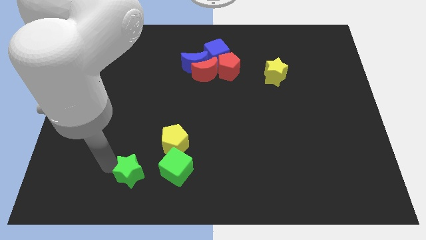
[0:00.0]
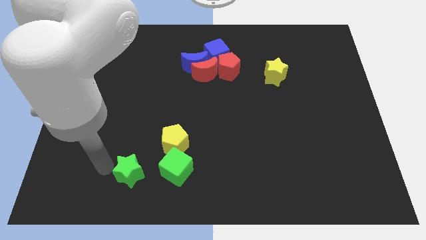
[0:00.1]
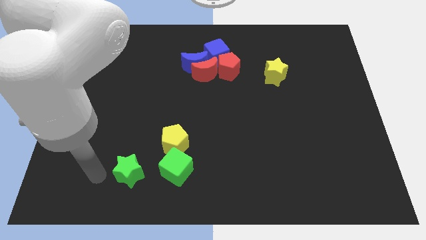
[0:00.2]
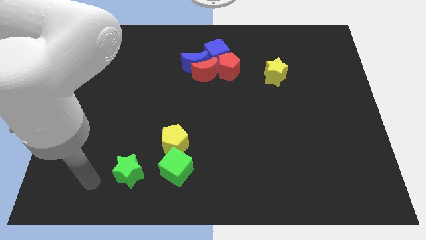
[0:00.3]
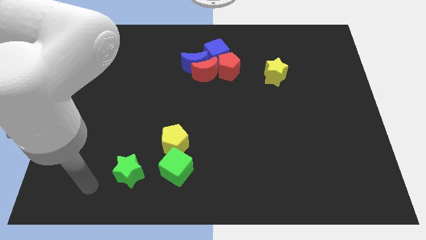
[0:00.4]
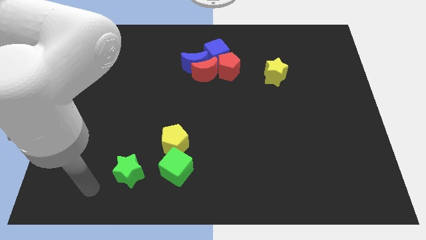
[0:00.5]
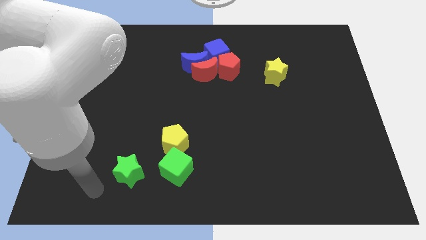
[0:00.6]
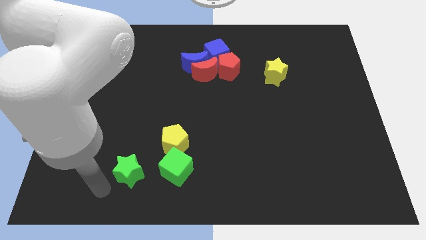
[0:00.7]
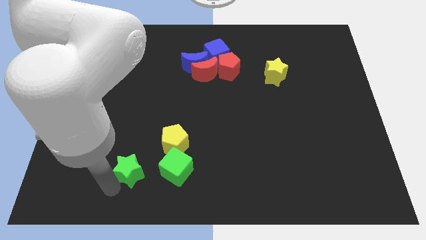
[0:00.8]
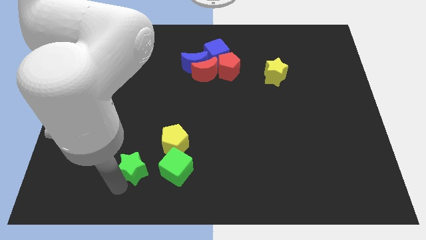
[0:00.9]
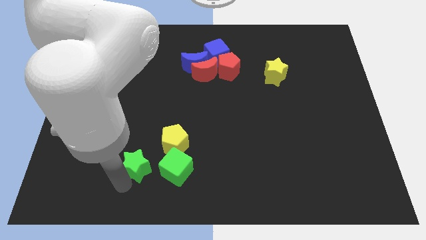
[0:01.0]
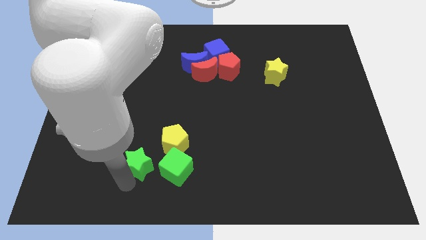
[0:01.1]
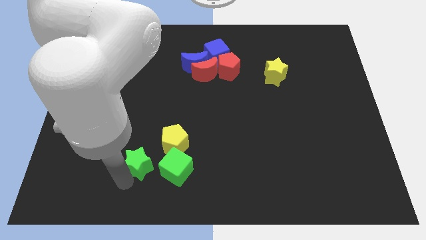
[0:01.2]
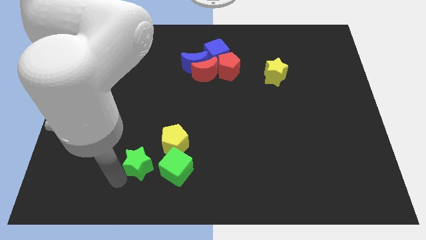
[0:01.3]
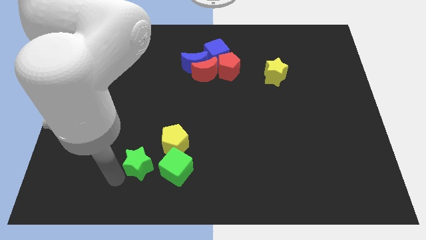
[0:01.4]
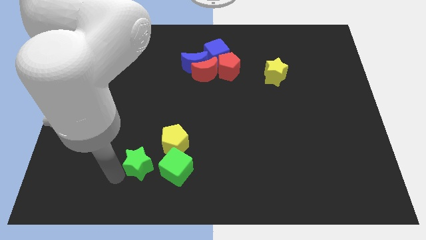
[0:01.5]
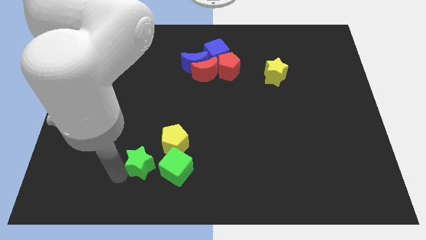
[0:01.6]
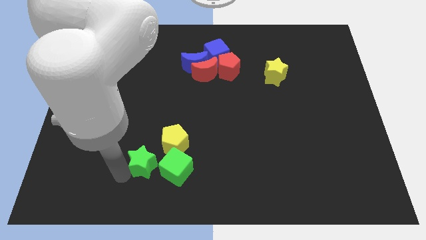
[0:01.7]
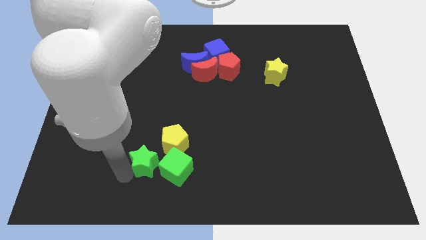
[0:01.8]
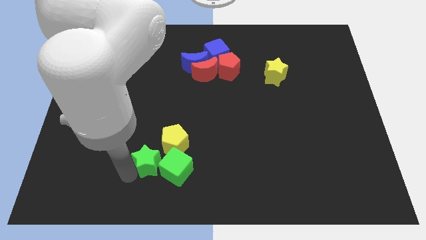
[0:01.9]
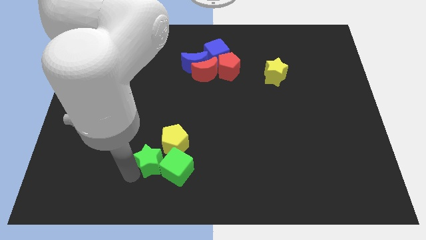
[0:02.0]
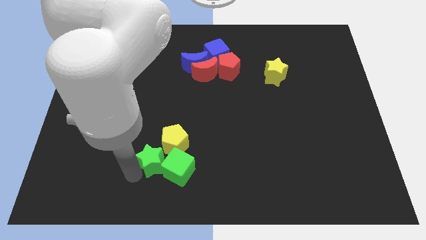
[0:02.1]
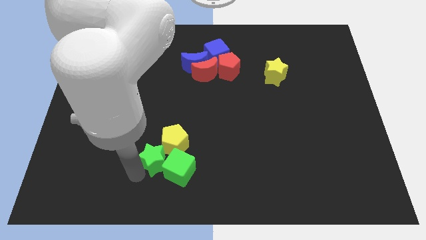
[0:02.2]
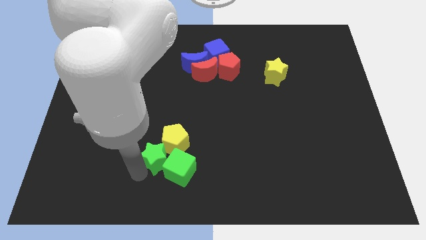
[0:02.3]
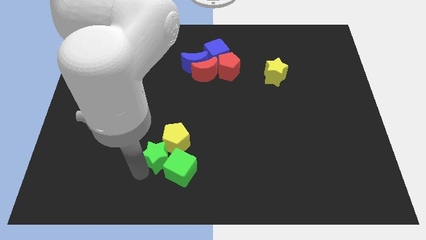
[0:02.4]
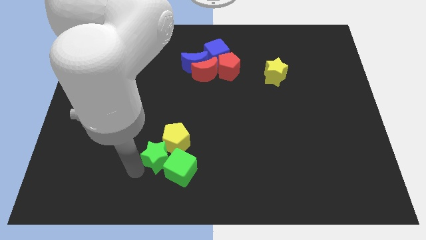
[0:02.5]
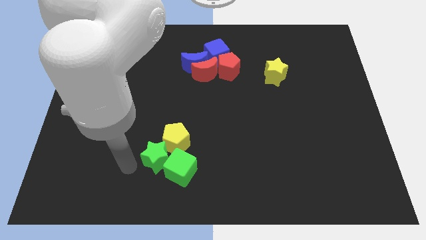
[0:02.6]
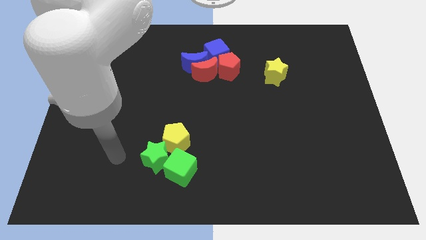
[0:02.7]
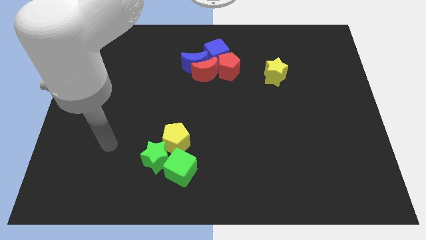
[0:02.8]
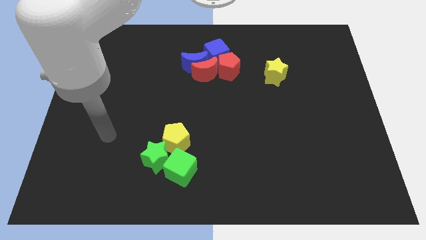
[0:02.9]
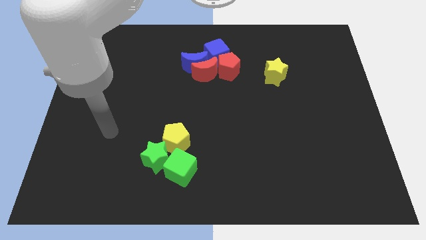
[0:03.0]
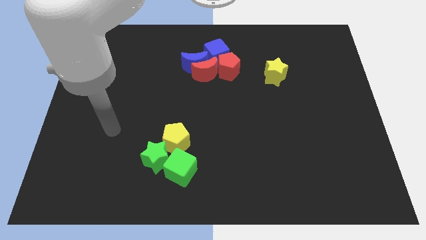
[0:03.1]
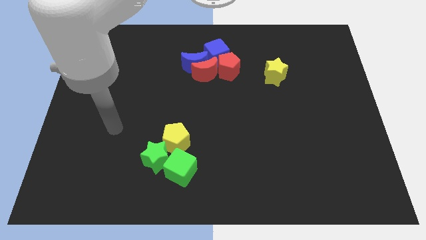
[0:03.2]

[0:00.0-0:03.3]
push the green star into the yellow pentagon and green cube

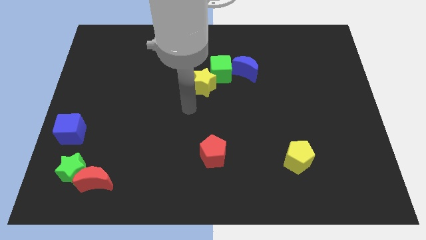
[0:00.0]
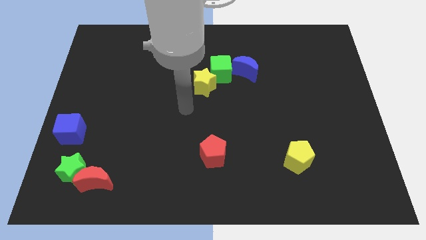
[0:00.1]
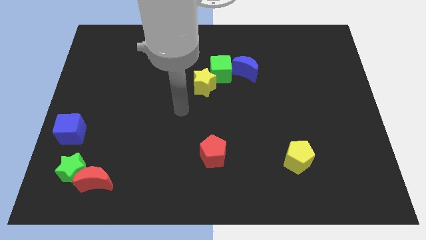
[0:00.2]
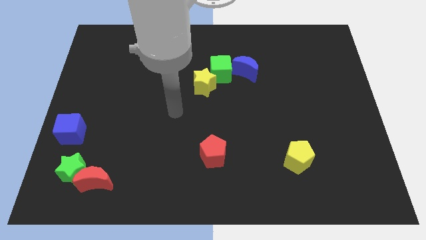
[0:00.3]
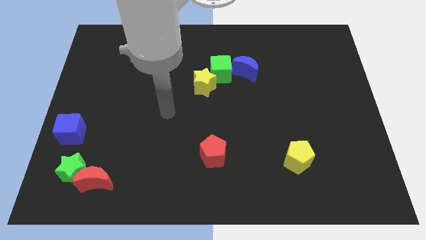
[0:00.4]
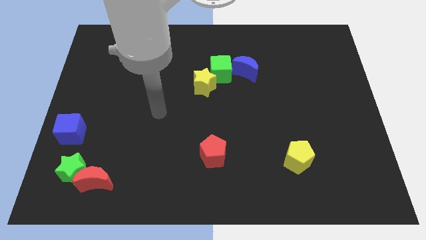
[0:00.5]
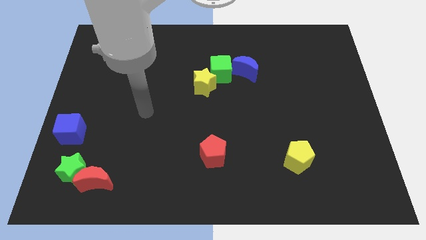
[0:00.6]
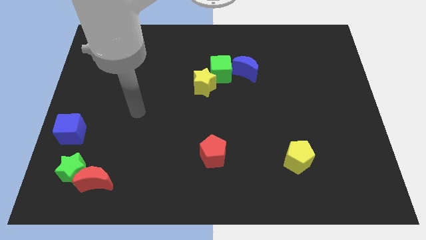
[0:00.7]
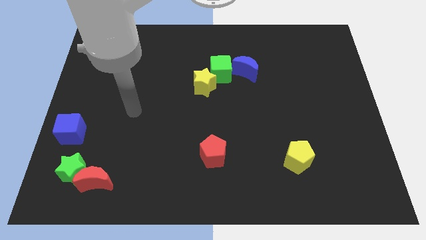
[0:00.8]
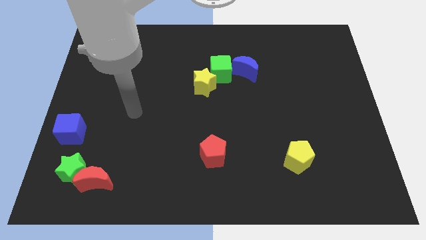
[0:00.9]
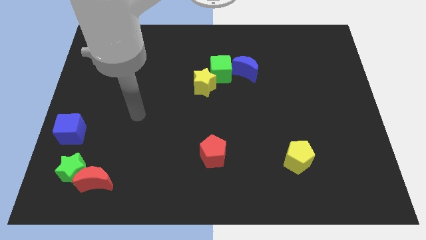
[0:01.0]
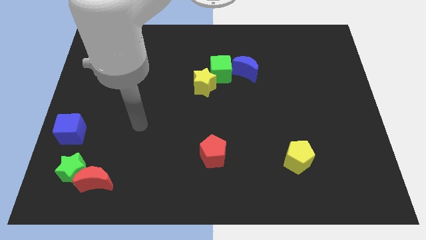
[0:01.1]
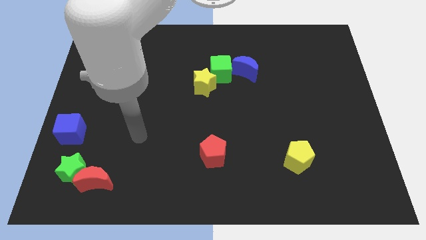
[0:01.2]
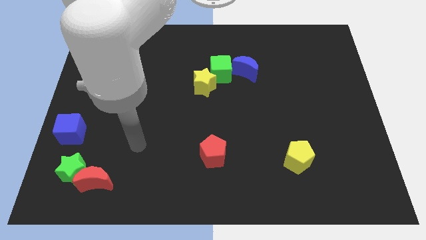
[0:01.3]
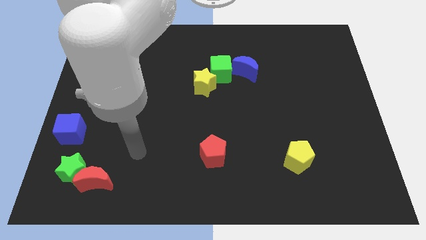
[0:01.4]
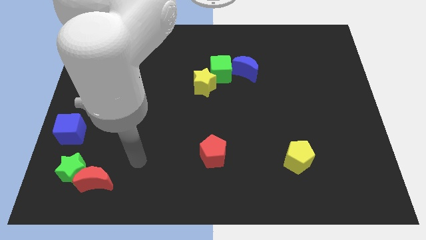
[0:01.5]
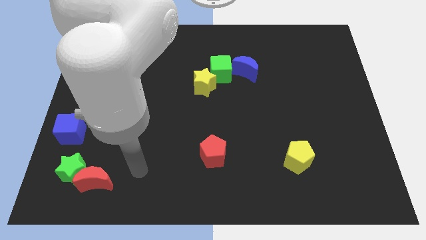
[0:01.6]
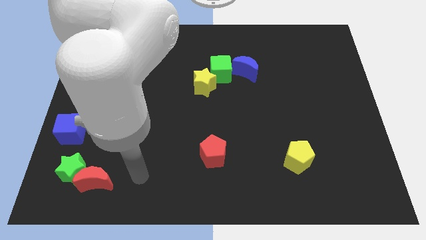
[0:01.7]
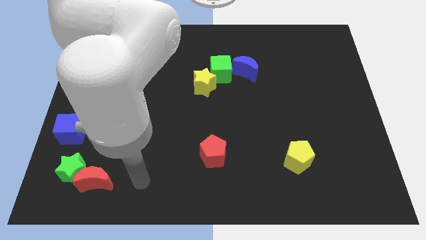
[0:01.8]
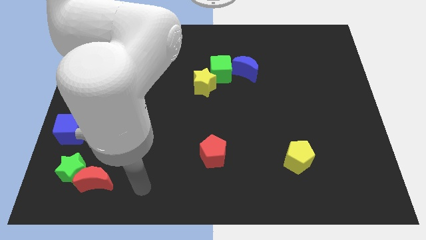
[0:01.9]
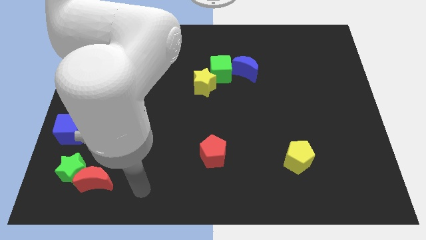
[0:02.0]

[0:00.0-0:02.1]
point your hand at the right side of the red crescent

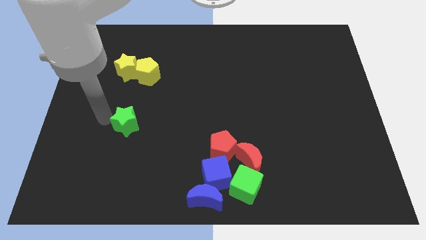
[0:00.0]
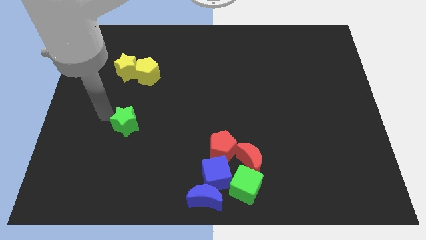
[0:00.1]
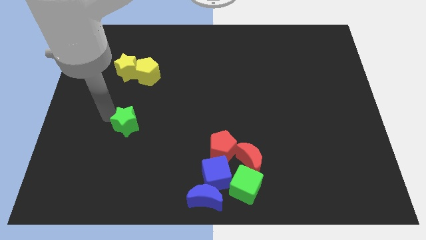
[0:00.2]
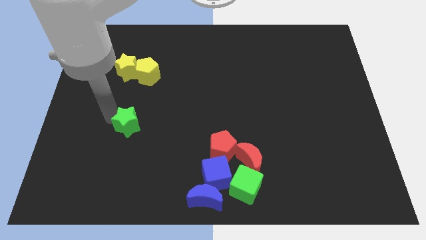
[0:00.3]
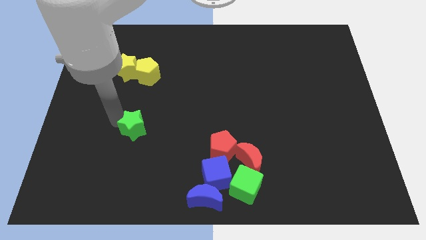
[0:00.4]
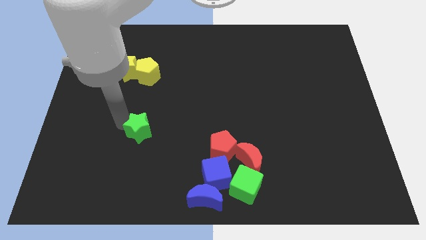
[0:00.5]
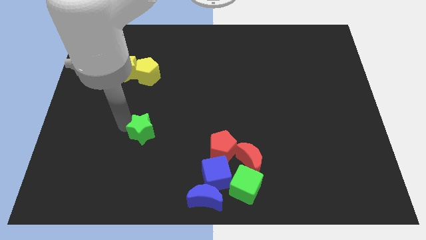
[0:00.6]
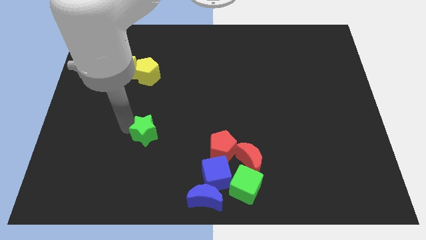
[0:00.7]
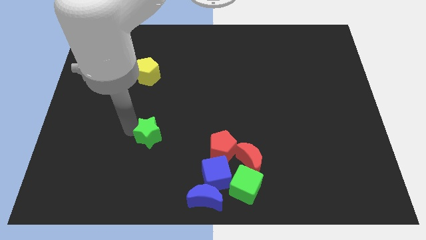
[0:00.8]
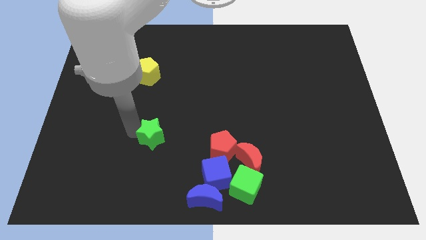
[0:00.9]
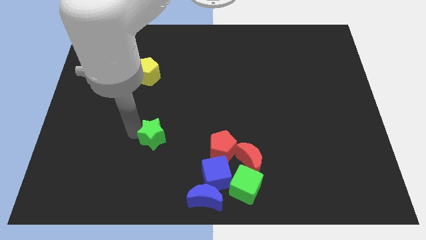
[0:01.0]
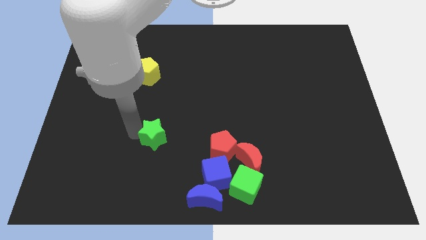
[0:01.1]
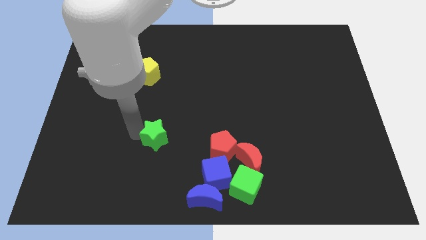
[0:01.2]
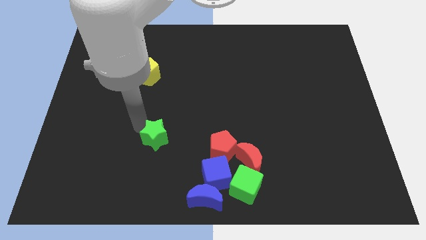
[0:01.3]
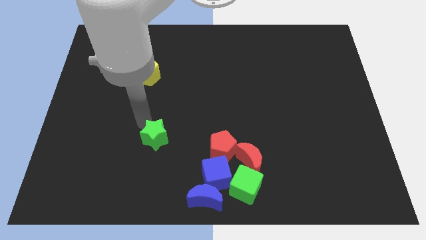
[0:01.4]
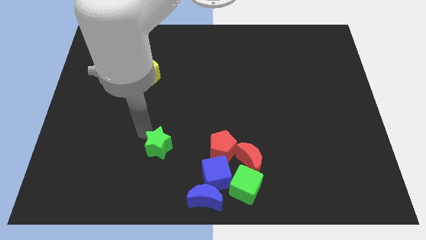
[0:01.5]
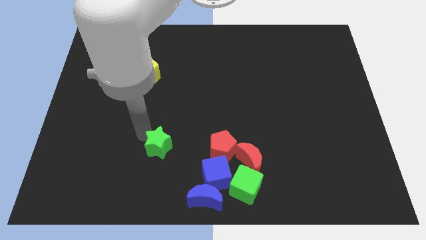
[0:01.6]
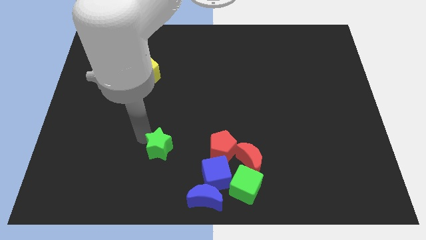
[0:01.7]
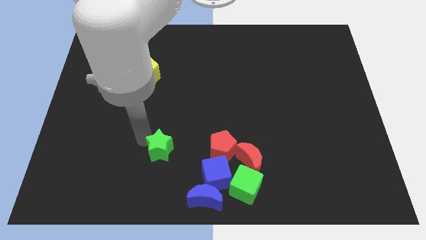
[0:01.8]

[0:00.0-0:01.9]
move green star to the left of the red pentagon

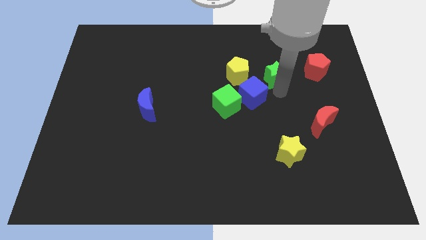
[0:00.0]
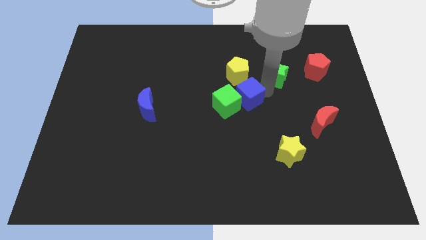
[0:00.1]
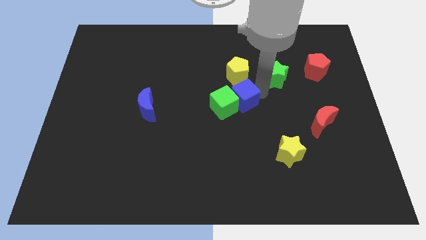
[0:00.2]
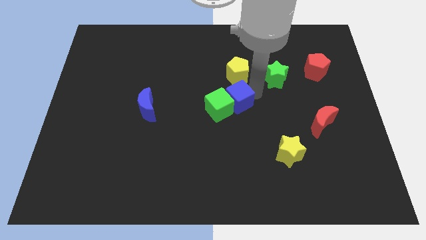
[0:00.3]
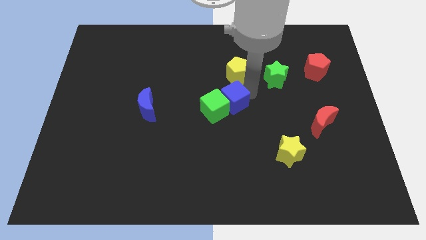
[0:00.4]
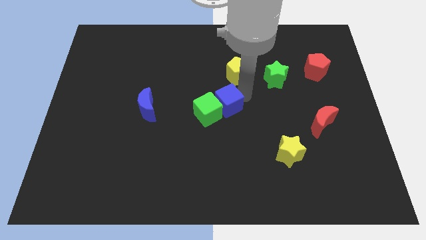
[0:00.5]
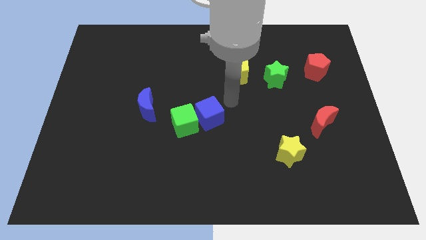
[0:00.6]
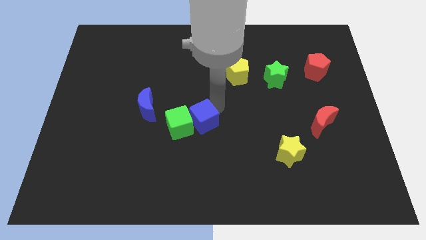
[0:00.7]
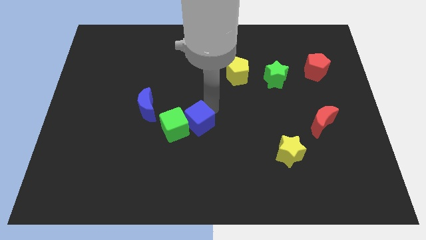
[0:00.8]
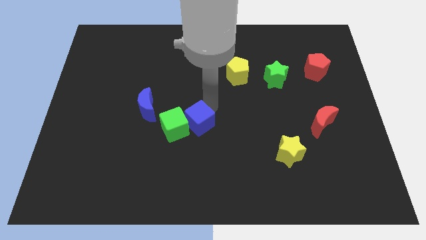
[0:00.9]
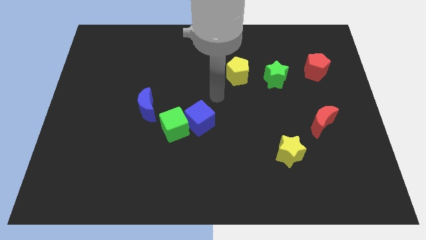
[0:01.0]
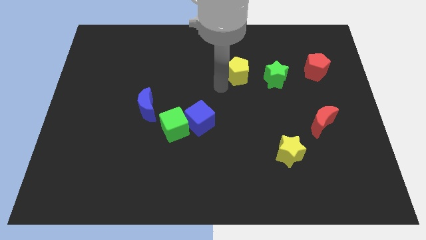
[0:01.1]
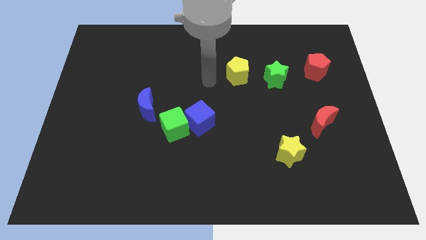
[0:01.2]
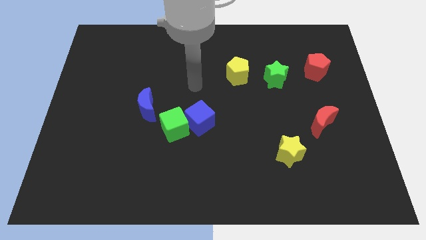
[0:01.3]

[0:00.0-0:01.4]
push the blue cube into the green cube
